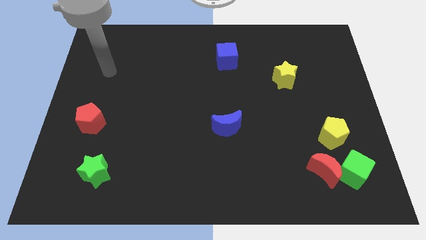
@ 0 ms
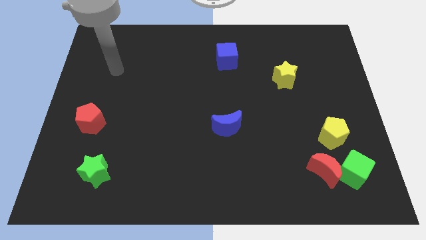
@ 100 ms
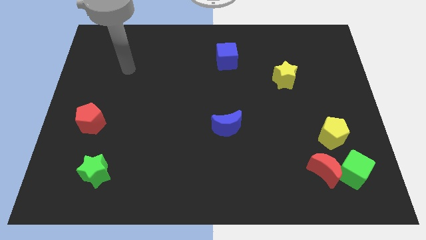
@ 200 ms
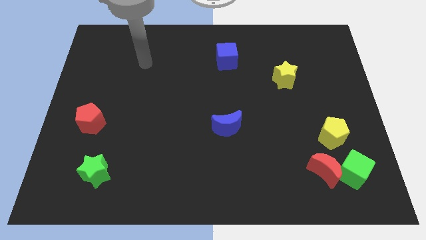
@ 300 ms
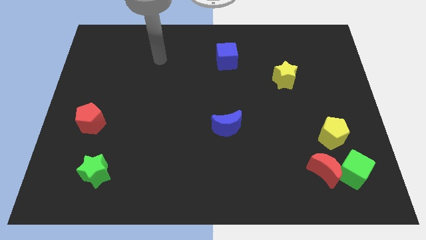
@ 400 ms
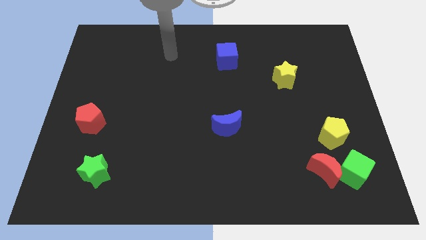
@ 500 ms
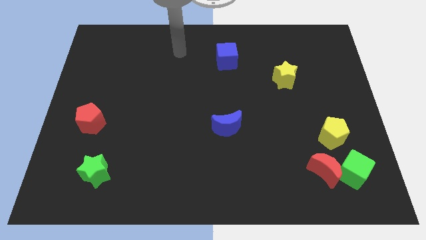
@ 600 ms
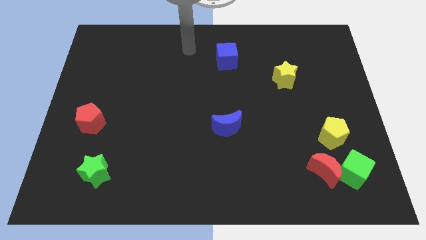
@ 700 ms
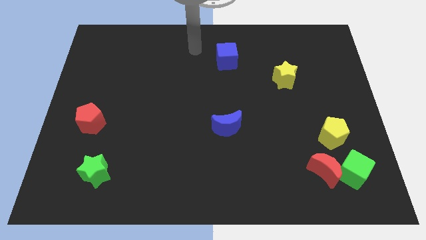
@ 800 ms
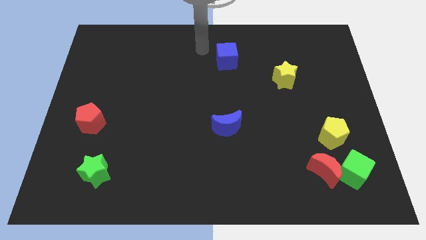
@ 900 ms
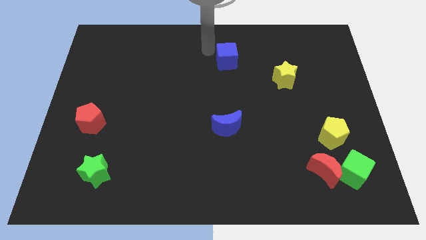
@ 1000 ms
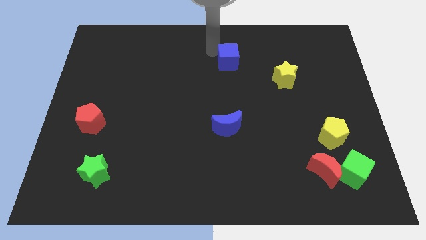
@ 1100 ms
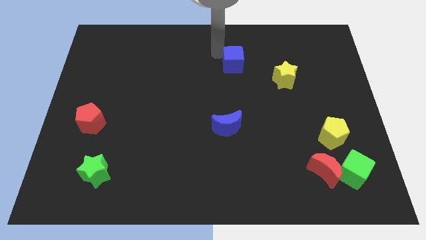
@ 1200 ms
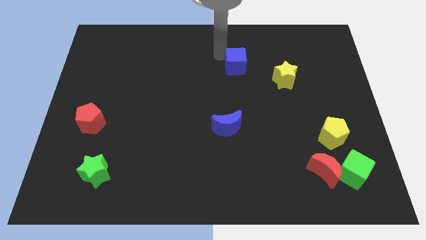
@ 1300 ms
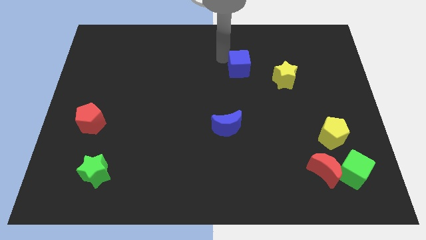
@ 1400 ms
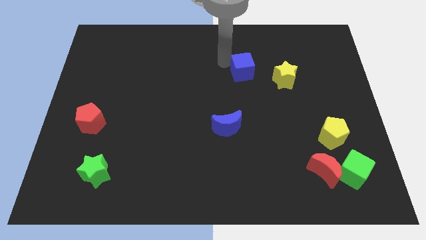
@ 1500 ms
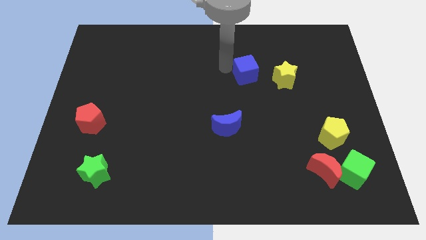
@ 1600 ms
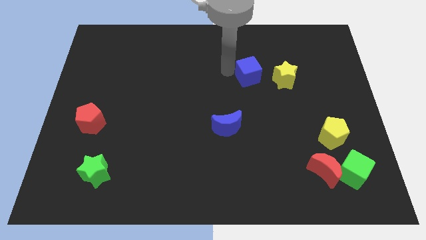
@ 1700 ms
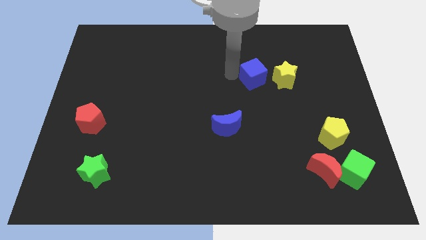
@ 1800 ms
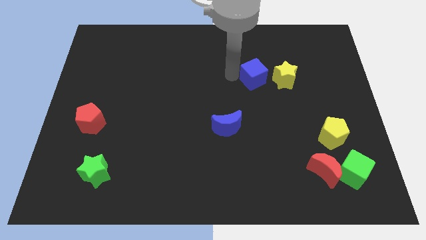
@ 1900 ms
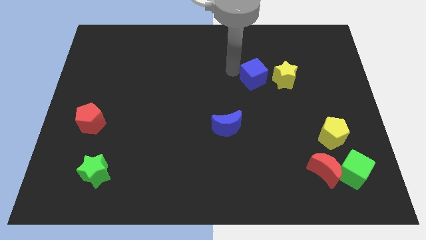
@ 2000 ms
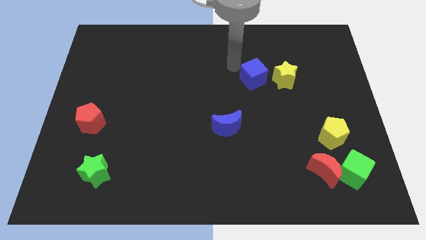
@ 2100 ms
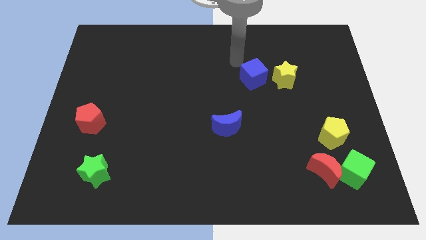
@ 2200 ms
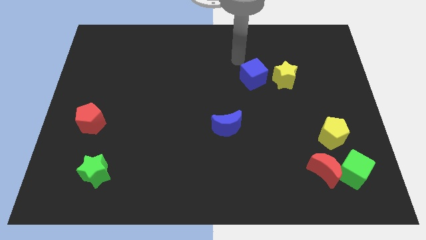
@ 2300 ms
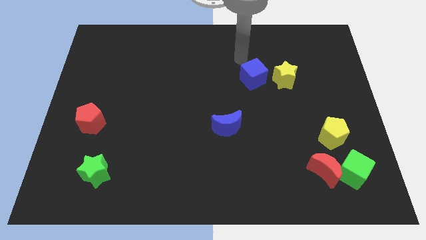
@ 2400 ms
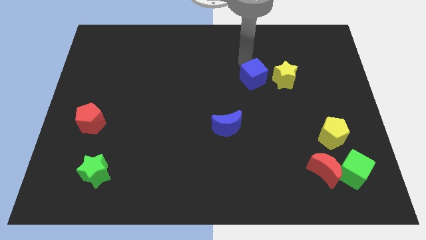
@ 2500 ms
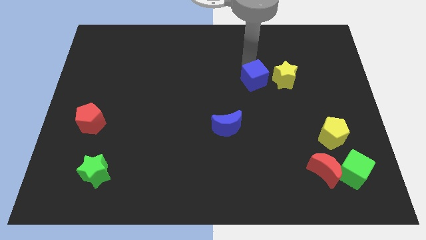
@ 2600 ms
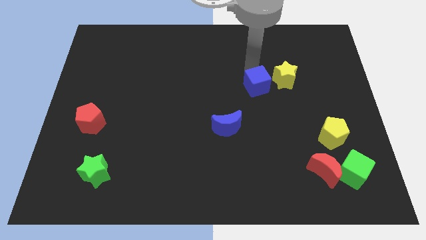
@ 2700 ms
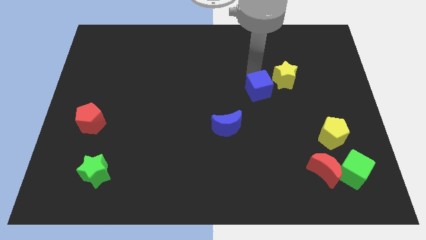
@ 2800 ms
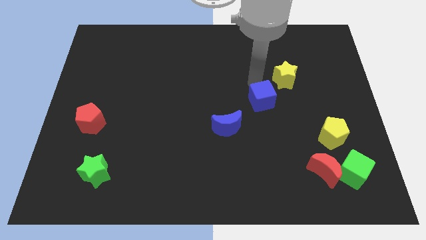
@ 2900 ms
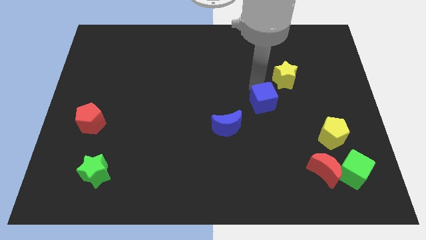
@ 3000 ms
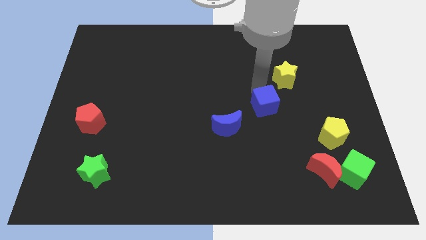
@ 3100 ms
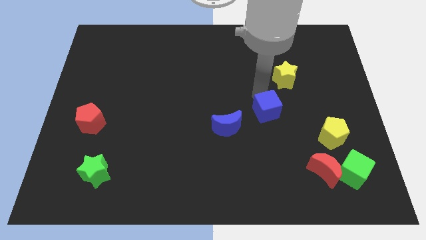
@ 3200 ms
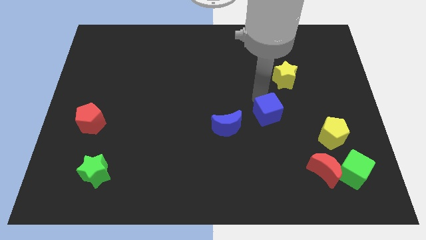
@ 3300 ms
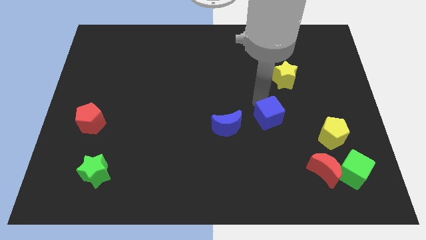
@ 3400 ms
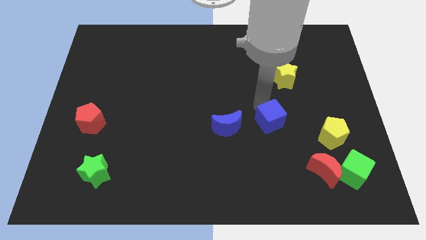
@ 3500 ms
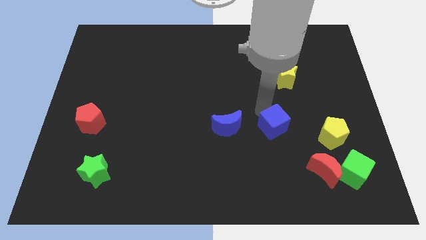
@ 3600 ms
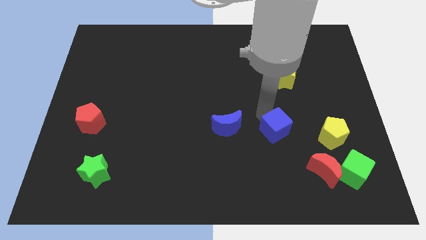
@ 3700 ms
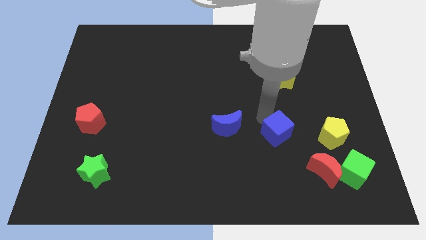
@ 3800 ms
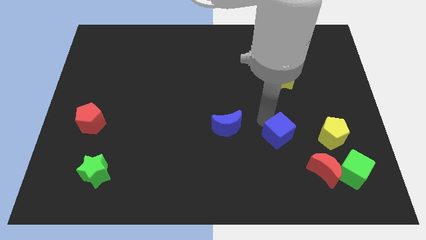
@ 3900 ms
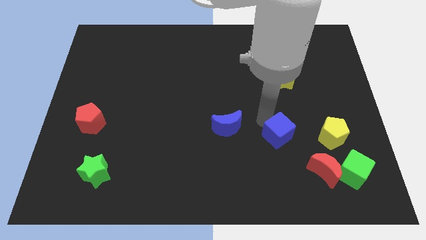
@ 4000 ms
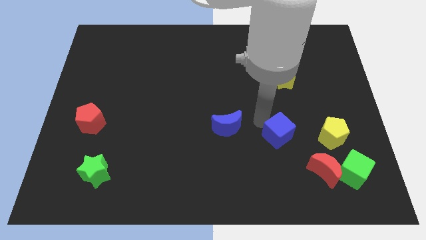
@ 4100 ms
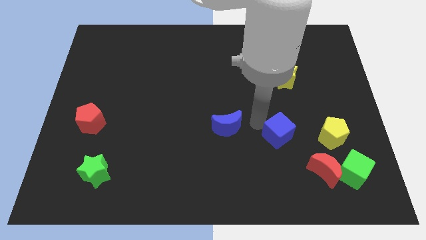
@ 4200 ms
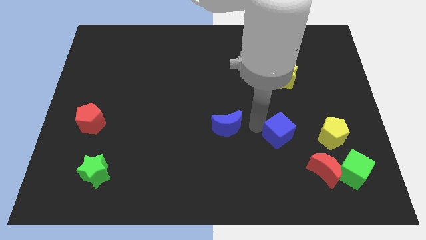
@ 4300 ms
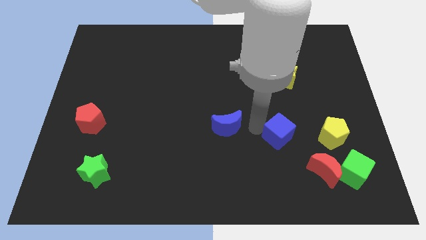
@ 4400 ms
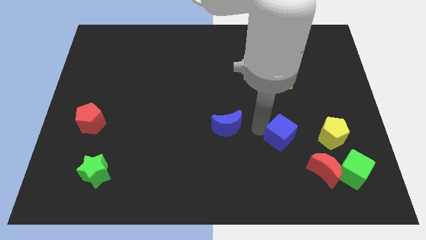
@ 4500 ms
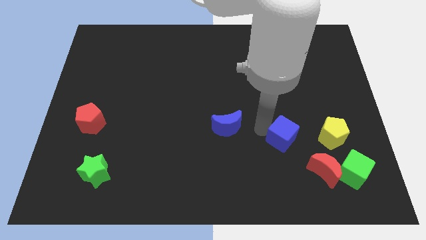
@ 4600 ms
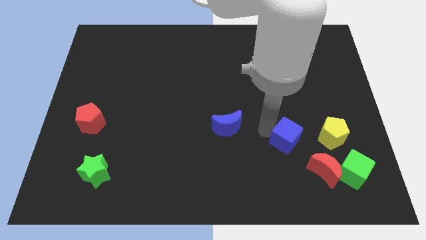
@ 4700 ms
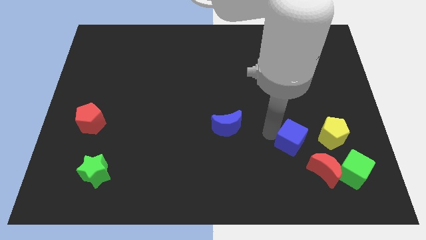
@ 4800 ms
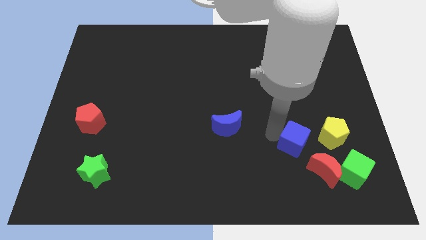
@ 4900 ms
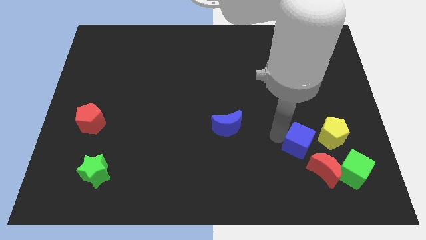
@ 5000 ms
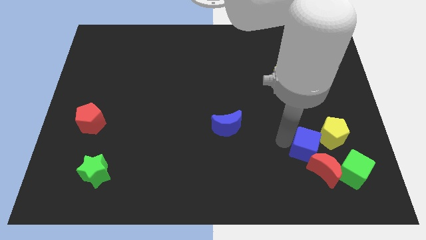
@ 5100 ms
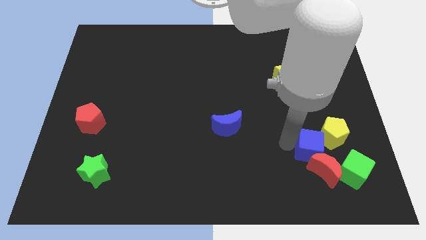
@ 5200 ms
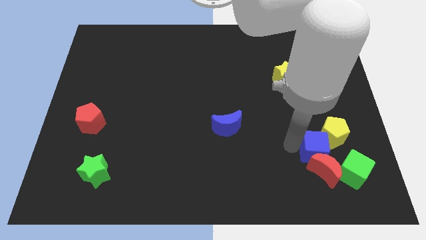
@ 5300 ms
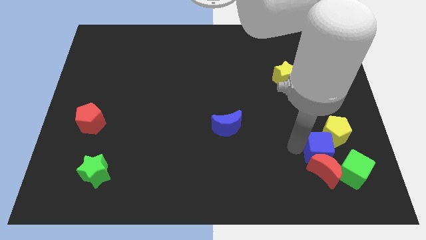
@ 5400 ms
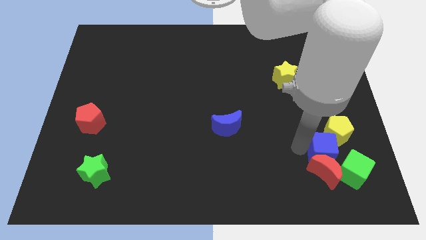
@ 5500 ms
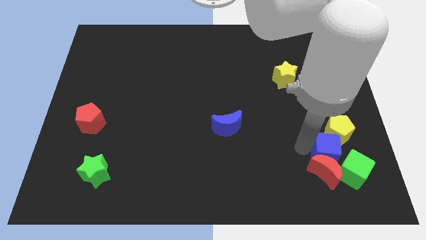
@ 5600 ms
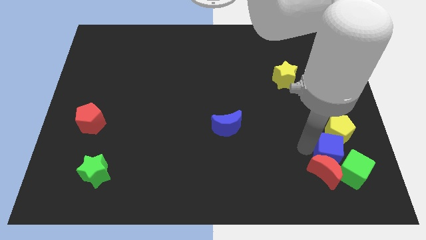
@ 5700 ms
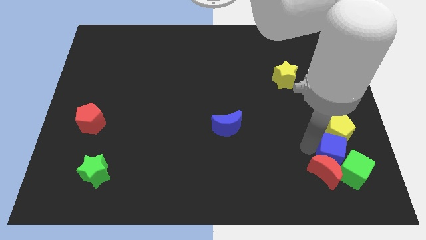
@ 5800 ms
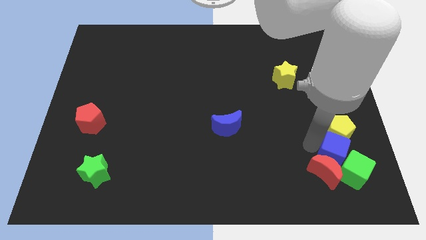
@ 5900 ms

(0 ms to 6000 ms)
slide the blue cube next to the green cube

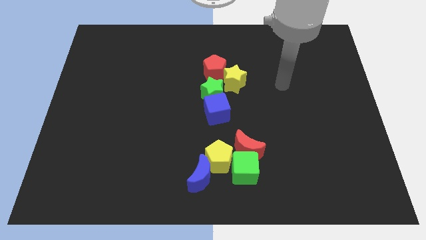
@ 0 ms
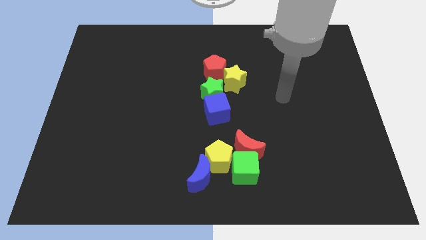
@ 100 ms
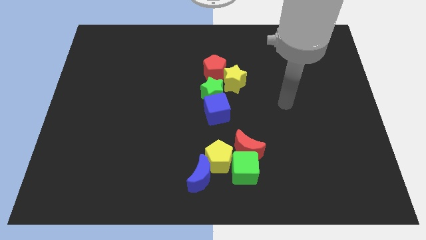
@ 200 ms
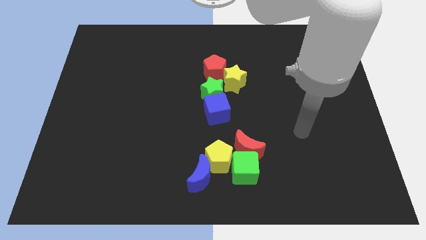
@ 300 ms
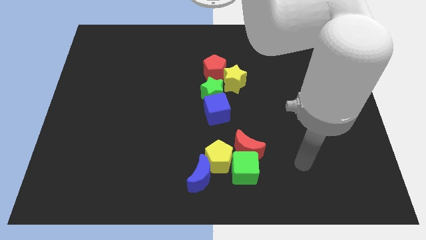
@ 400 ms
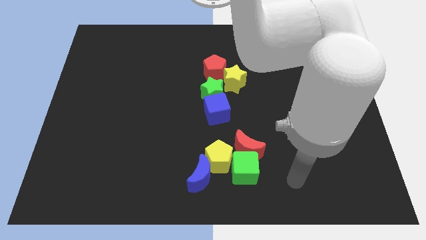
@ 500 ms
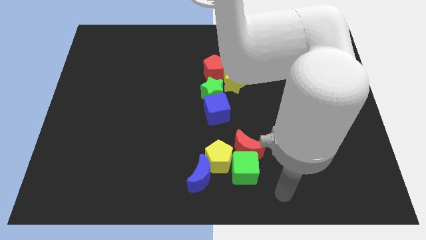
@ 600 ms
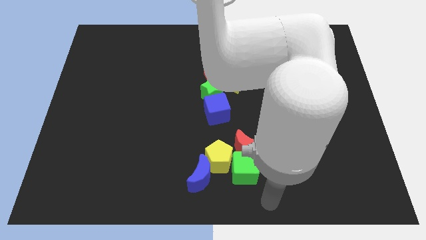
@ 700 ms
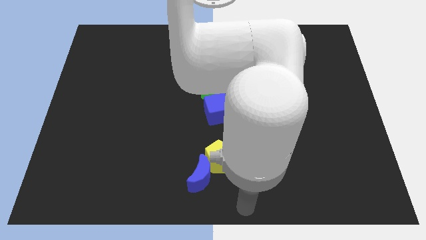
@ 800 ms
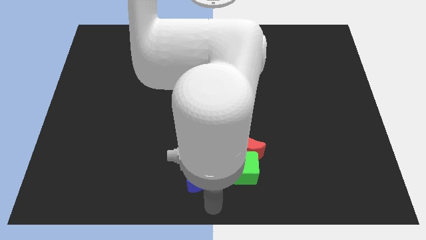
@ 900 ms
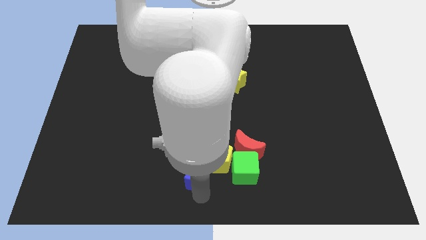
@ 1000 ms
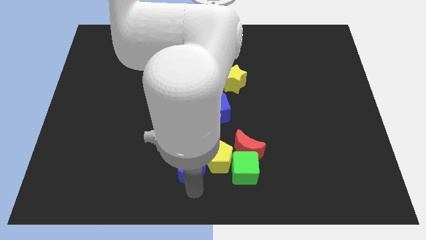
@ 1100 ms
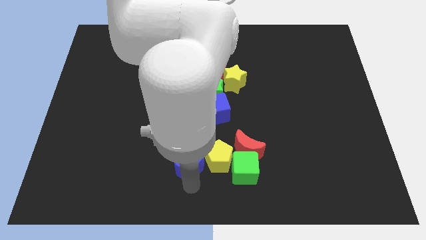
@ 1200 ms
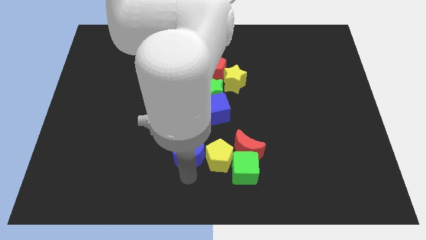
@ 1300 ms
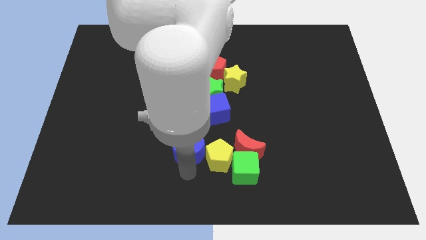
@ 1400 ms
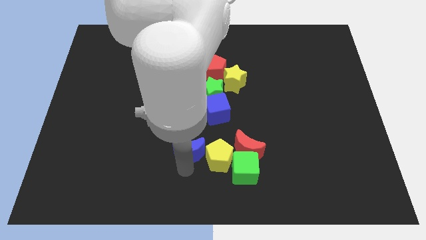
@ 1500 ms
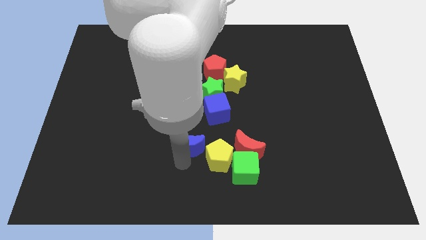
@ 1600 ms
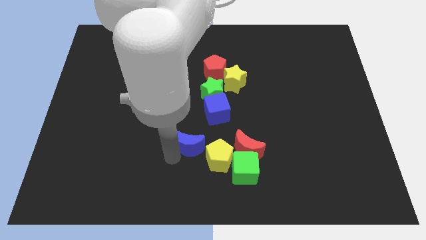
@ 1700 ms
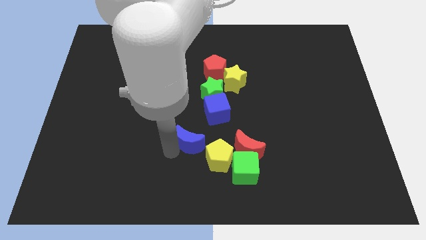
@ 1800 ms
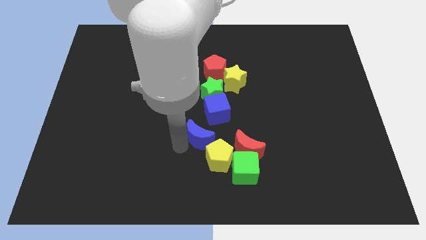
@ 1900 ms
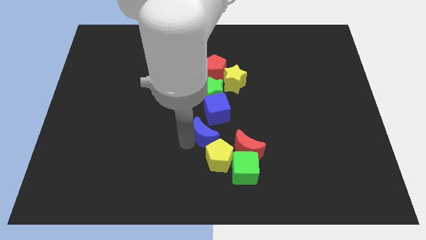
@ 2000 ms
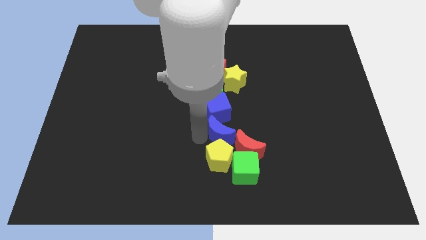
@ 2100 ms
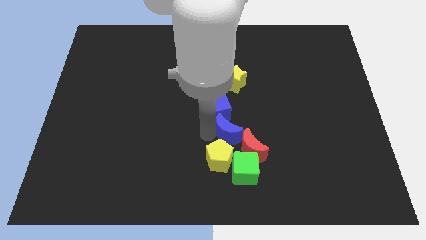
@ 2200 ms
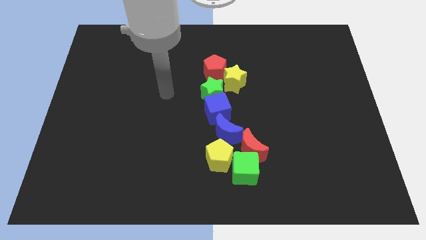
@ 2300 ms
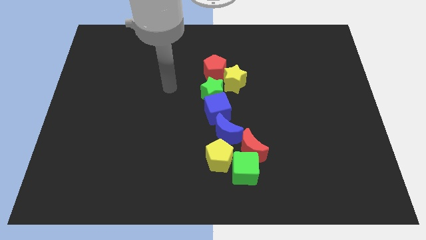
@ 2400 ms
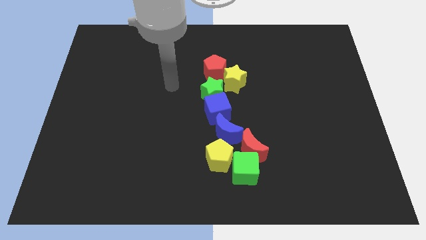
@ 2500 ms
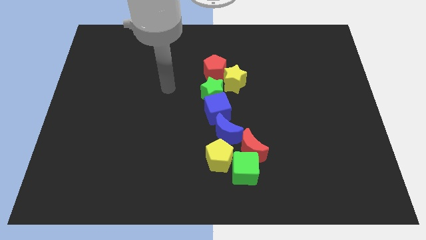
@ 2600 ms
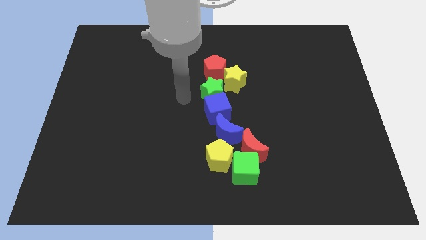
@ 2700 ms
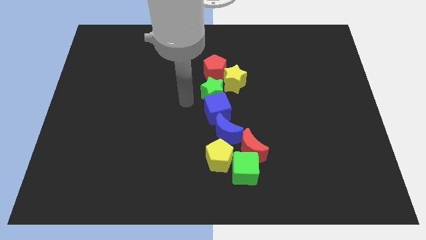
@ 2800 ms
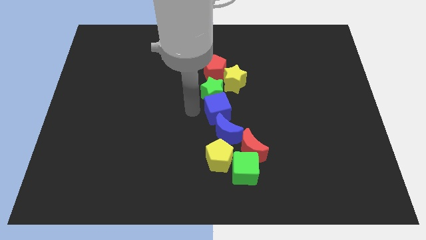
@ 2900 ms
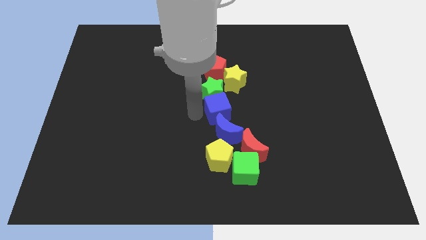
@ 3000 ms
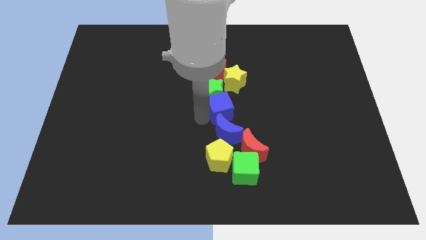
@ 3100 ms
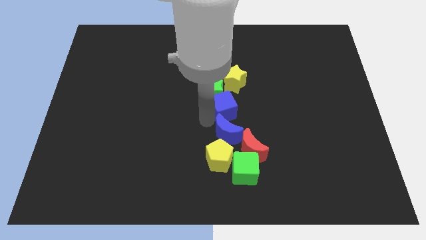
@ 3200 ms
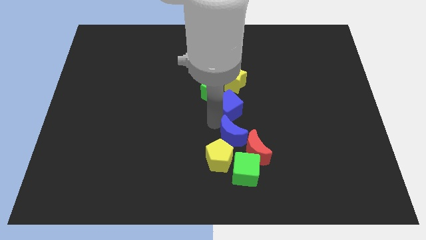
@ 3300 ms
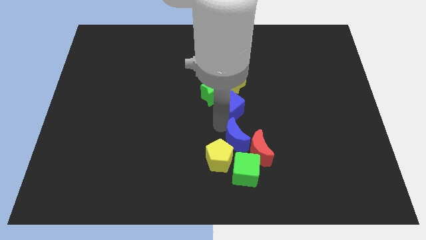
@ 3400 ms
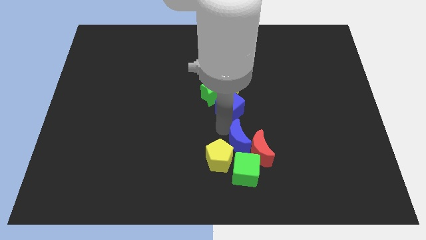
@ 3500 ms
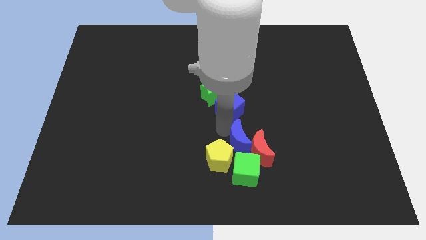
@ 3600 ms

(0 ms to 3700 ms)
slide the blue moon close to the red moon
